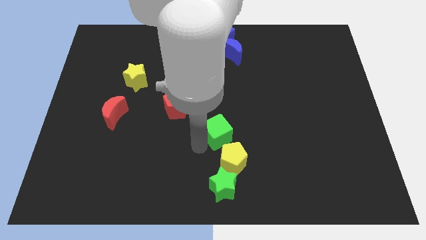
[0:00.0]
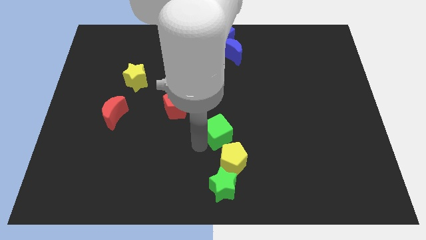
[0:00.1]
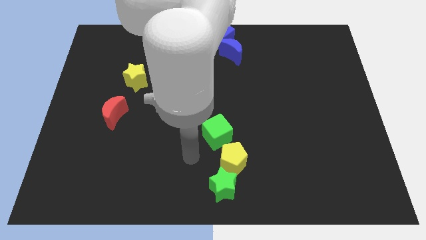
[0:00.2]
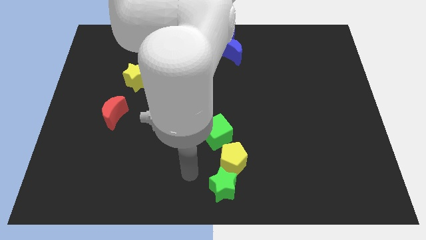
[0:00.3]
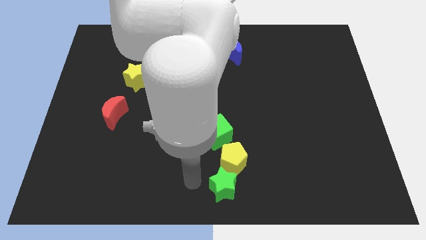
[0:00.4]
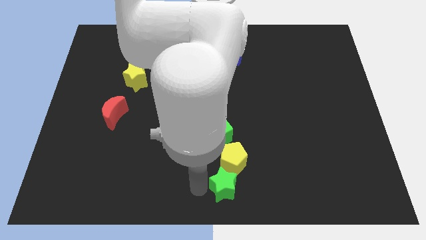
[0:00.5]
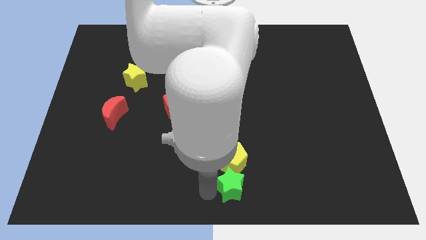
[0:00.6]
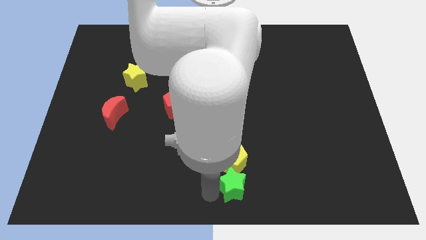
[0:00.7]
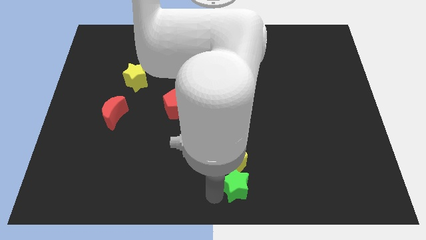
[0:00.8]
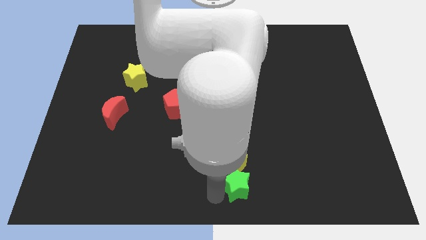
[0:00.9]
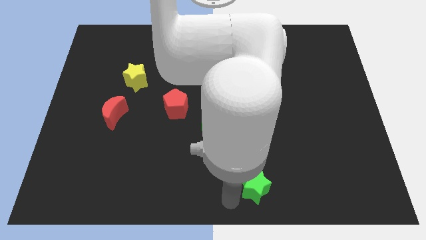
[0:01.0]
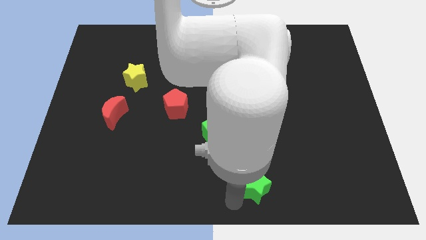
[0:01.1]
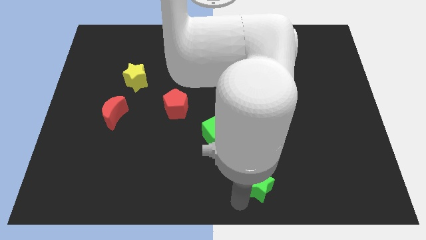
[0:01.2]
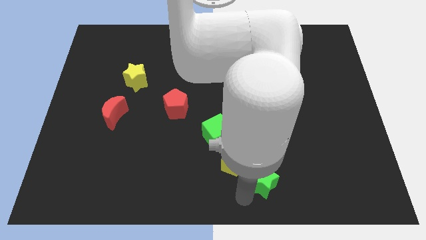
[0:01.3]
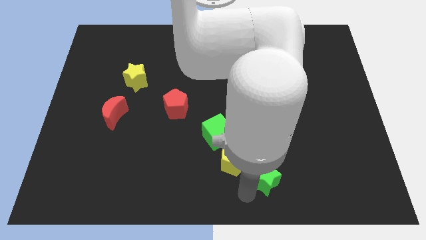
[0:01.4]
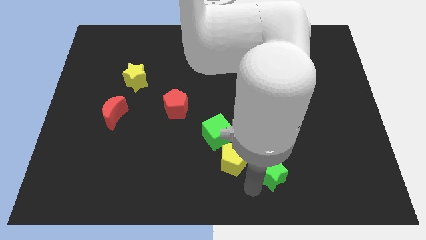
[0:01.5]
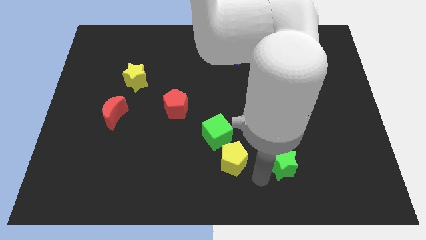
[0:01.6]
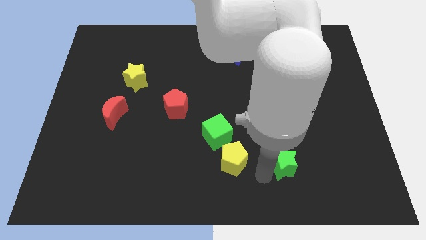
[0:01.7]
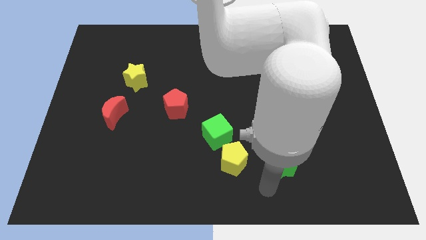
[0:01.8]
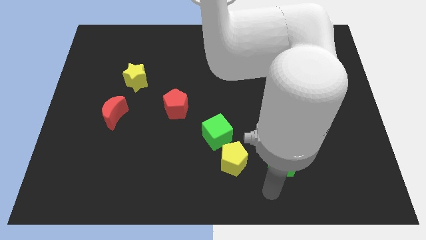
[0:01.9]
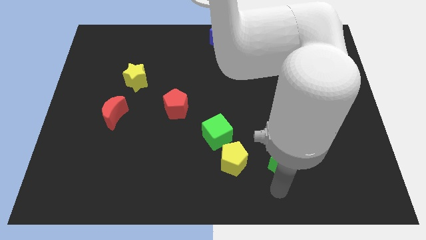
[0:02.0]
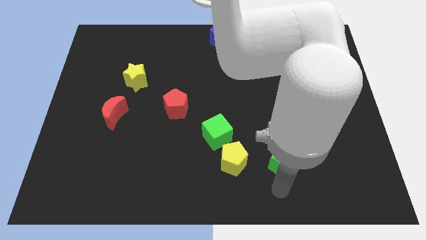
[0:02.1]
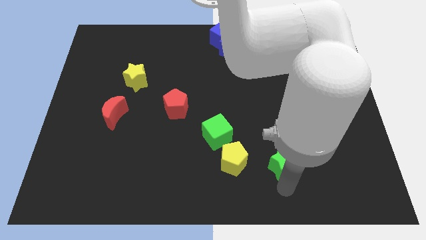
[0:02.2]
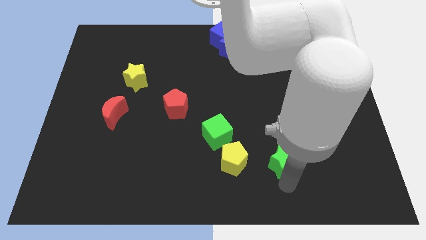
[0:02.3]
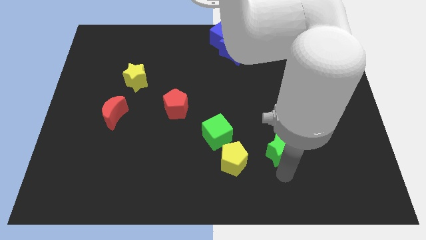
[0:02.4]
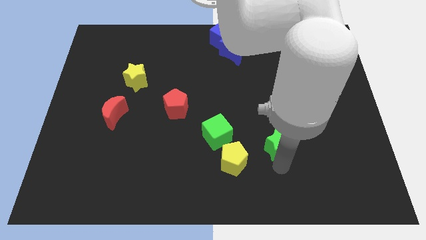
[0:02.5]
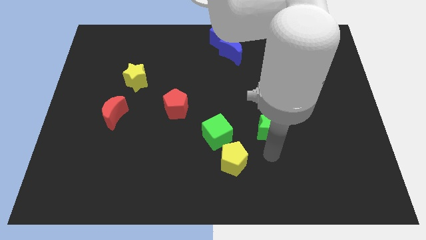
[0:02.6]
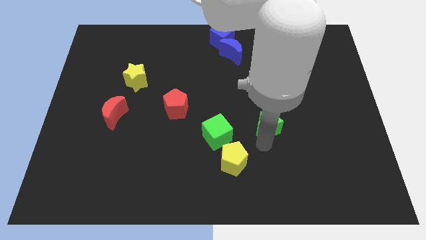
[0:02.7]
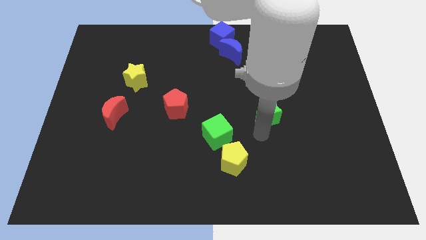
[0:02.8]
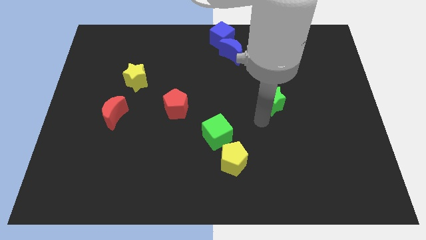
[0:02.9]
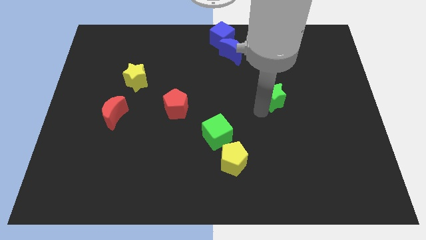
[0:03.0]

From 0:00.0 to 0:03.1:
move the green star to the top right of the green cube

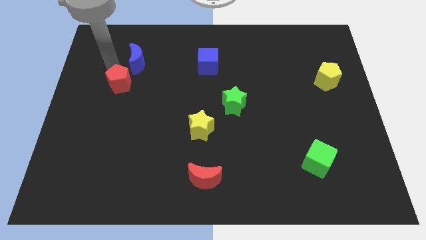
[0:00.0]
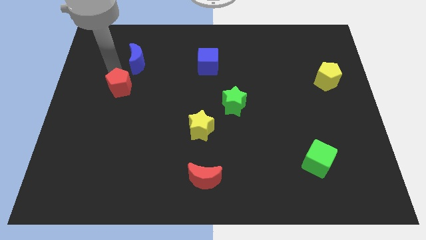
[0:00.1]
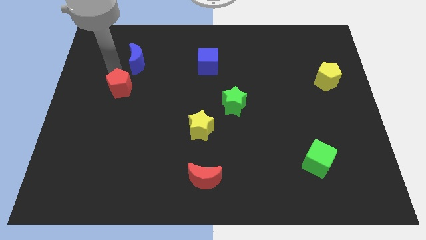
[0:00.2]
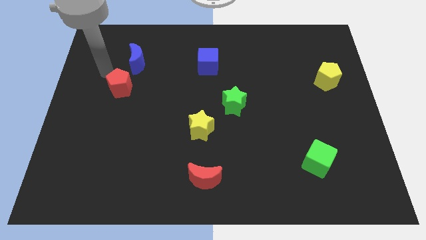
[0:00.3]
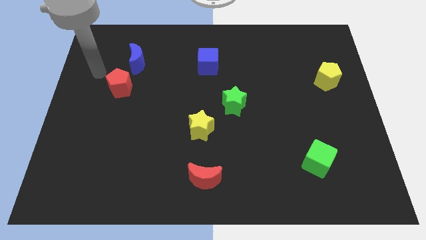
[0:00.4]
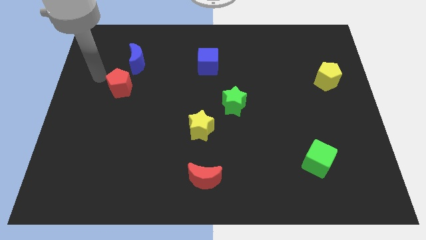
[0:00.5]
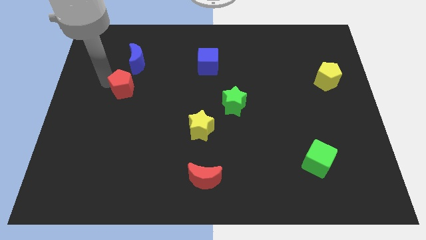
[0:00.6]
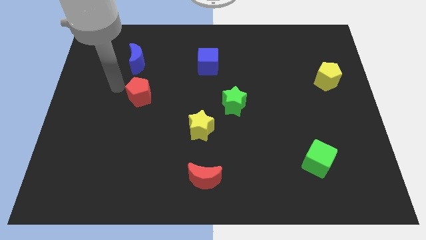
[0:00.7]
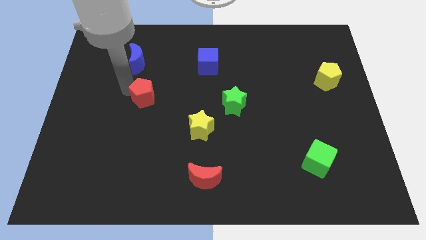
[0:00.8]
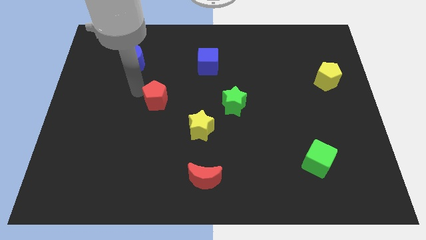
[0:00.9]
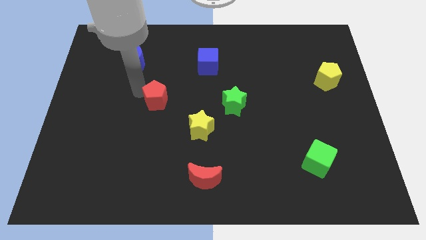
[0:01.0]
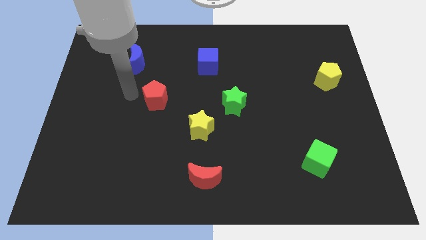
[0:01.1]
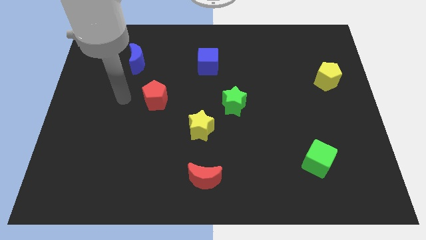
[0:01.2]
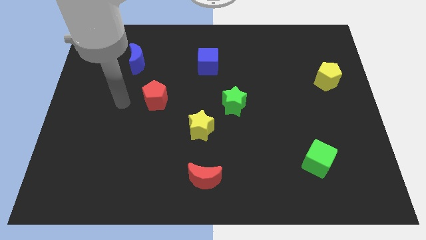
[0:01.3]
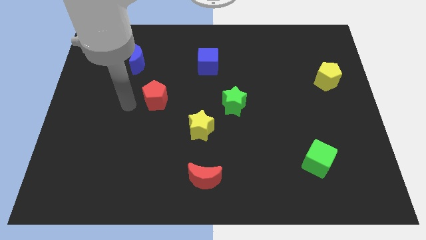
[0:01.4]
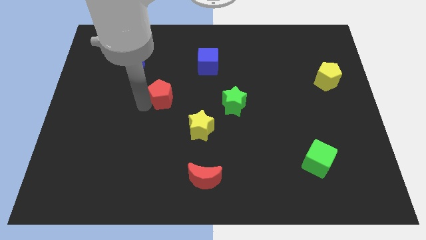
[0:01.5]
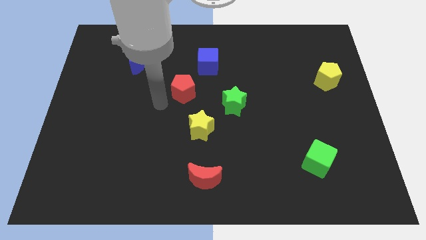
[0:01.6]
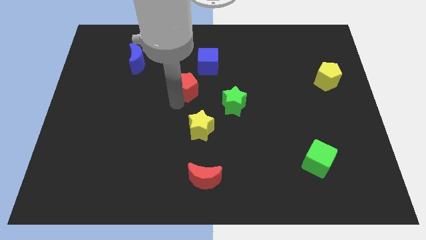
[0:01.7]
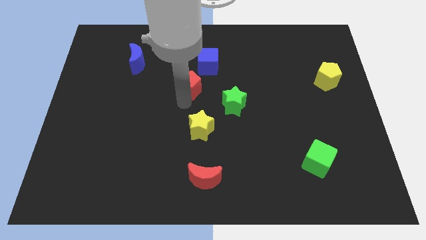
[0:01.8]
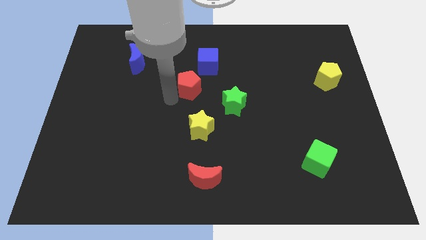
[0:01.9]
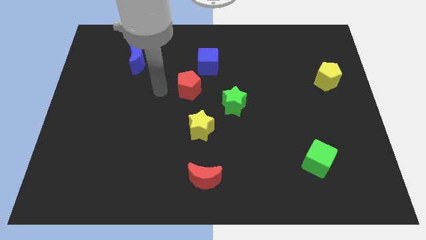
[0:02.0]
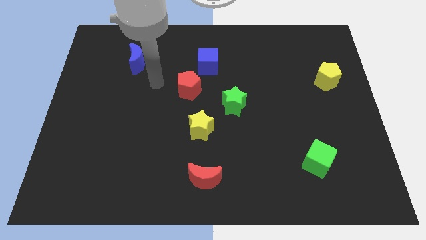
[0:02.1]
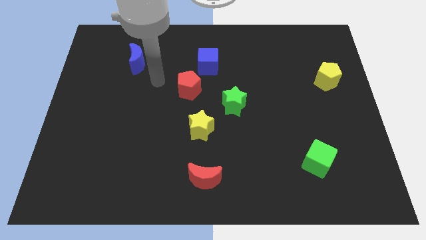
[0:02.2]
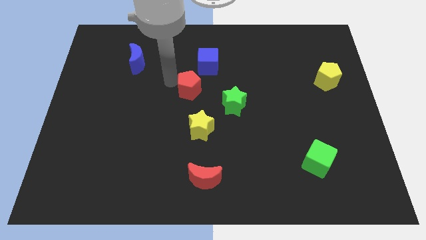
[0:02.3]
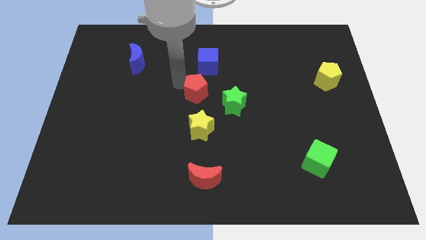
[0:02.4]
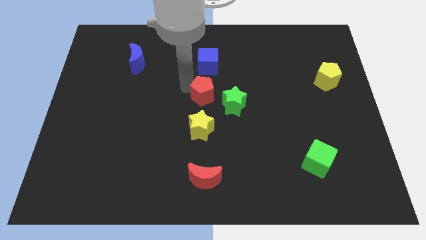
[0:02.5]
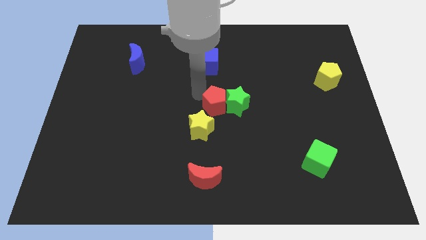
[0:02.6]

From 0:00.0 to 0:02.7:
push the red pentagon into the green star

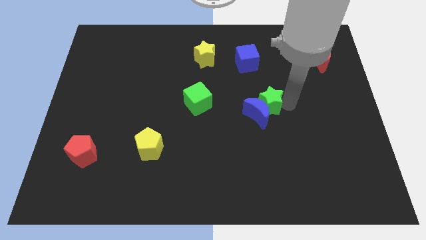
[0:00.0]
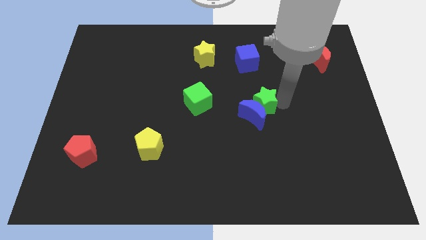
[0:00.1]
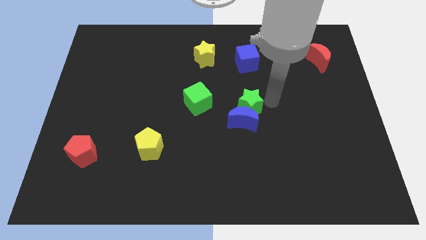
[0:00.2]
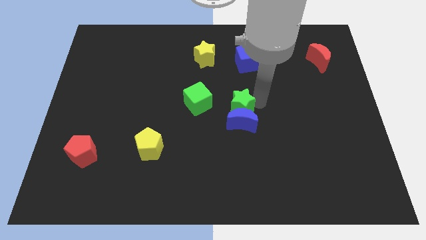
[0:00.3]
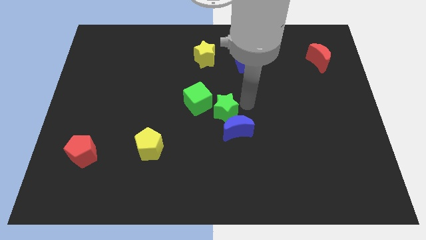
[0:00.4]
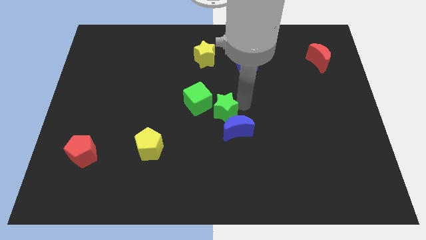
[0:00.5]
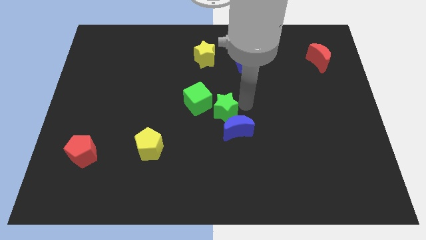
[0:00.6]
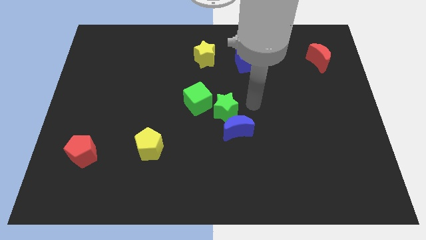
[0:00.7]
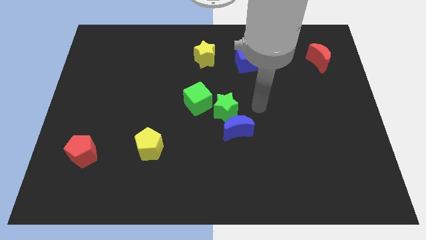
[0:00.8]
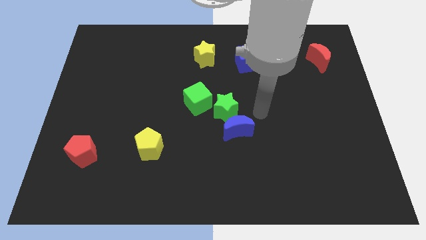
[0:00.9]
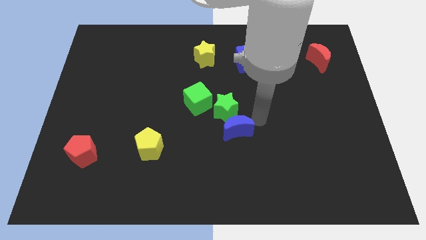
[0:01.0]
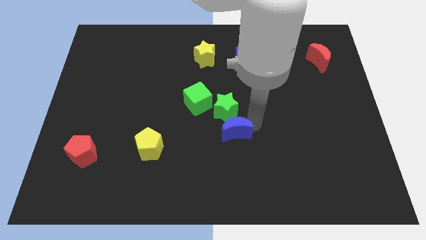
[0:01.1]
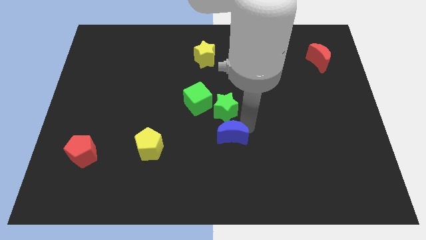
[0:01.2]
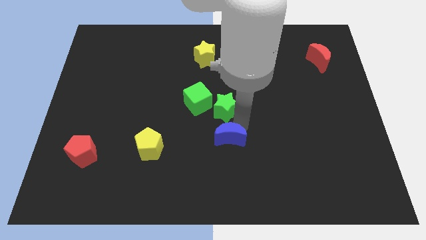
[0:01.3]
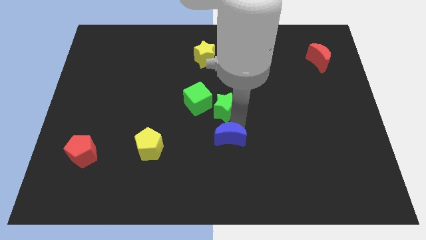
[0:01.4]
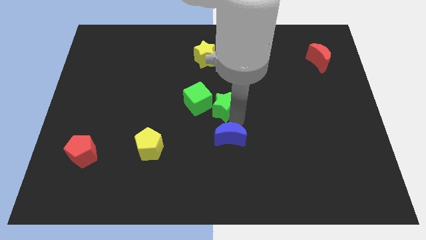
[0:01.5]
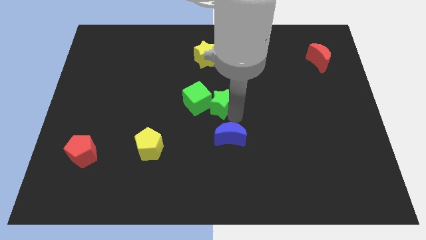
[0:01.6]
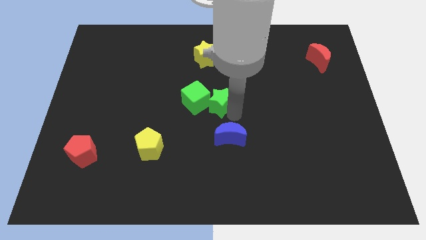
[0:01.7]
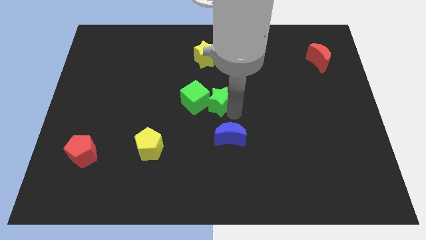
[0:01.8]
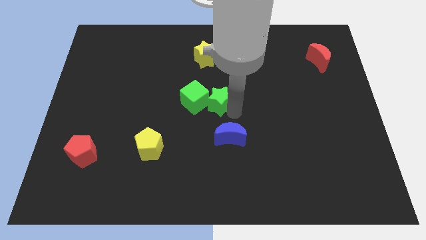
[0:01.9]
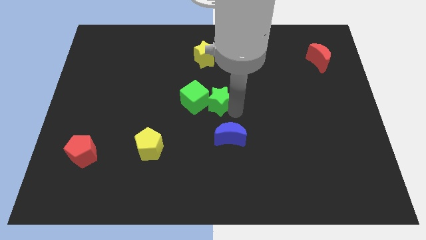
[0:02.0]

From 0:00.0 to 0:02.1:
push the green star into the green cube

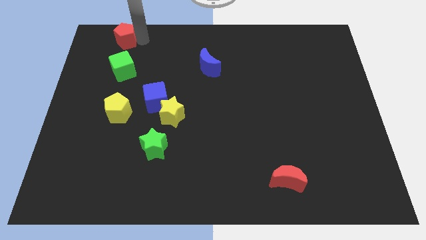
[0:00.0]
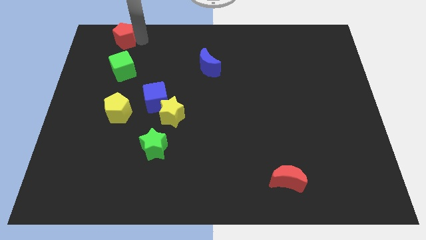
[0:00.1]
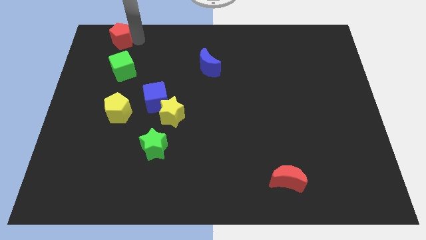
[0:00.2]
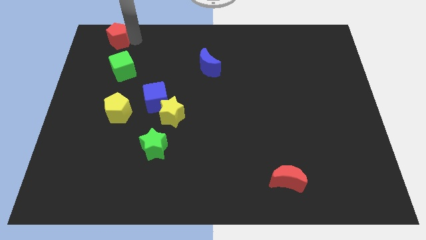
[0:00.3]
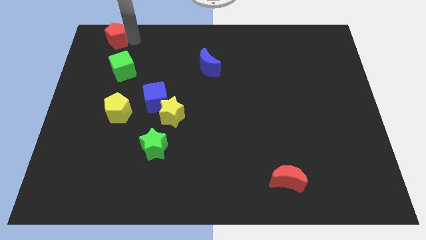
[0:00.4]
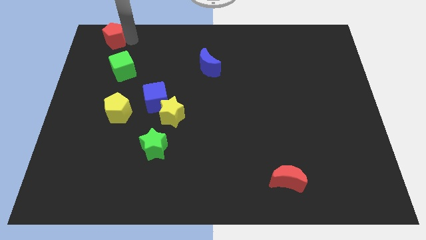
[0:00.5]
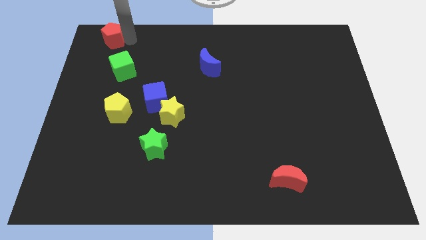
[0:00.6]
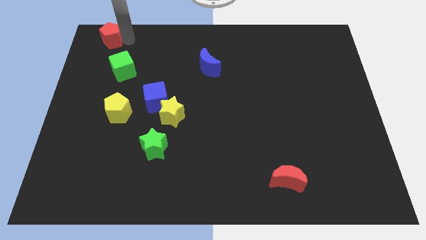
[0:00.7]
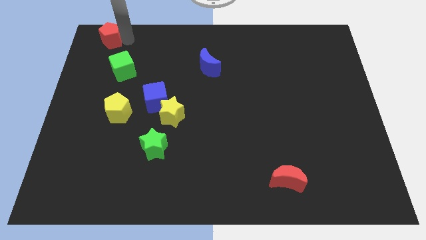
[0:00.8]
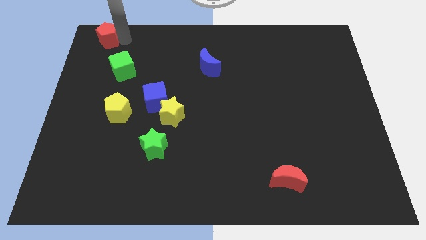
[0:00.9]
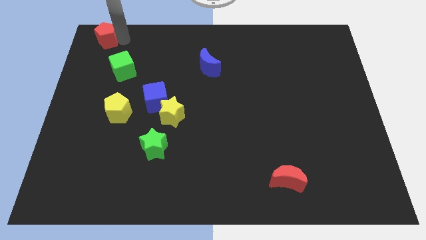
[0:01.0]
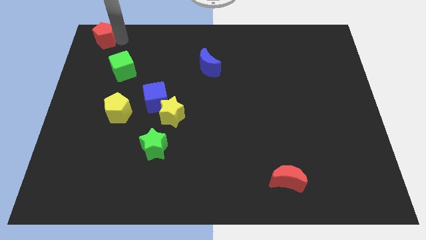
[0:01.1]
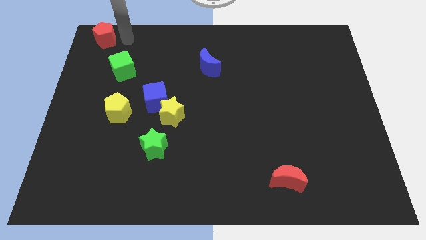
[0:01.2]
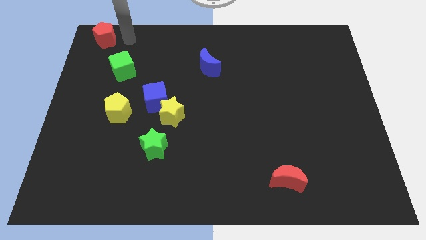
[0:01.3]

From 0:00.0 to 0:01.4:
slide the red pentagon to the top left corner of the board
